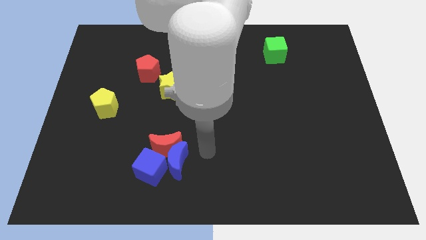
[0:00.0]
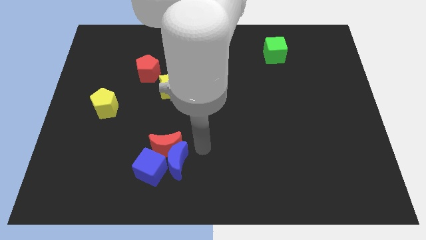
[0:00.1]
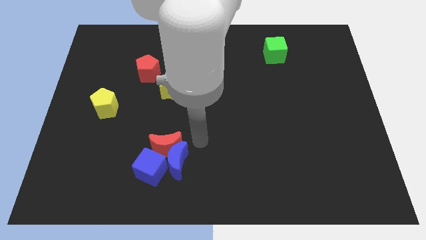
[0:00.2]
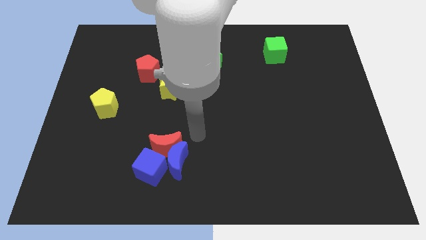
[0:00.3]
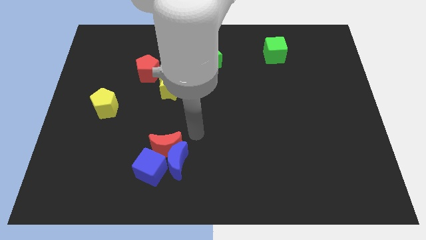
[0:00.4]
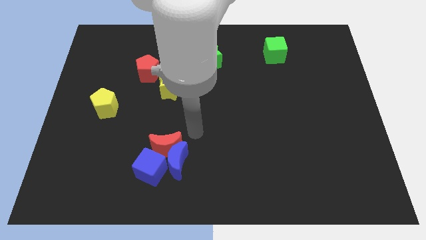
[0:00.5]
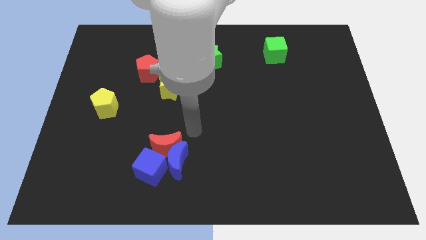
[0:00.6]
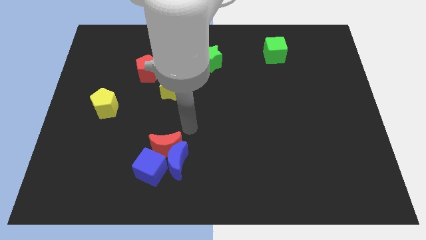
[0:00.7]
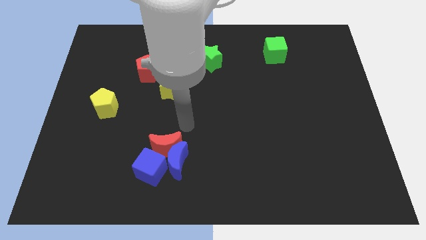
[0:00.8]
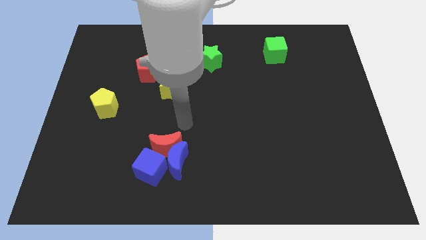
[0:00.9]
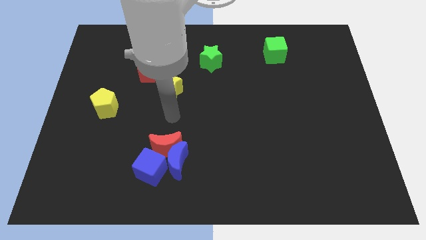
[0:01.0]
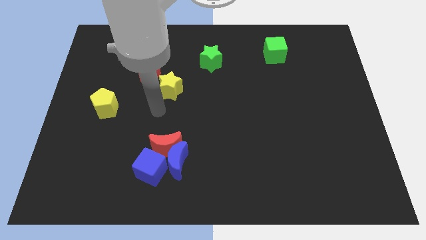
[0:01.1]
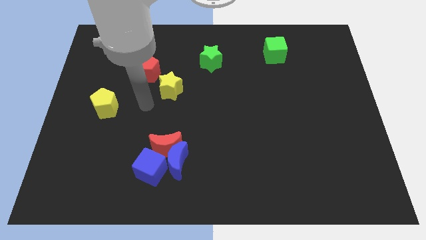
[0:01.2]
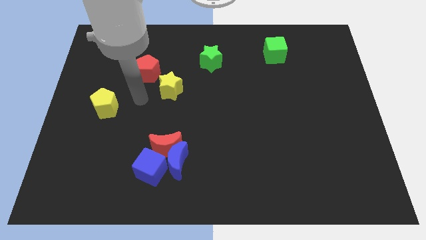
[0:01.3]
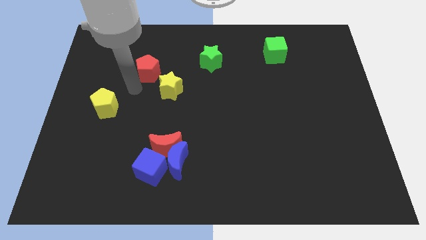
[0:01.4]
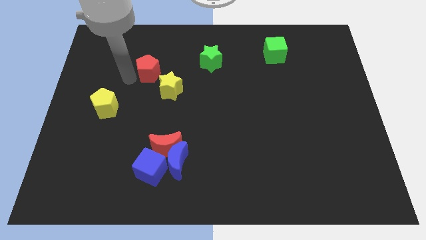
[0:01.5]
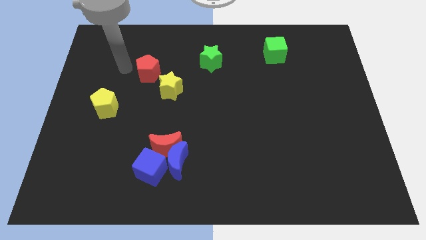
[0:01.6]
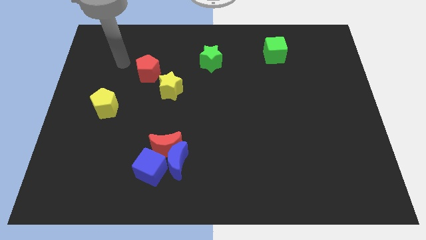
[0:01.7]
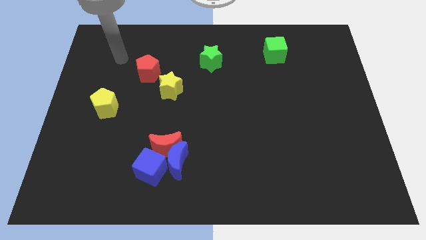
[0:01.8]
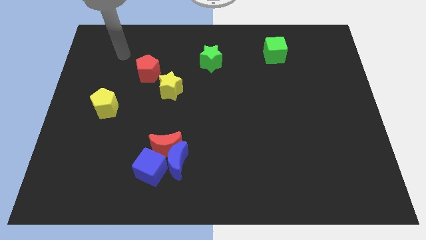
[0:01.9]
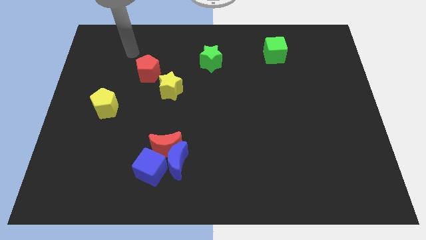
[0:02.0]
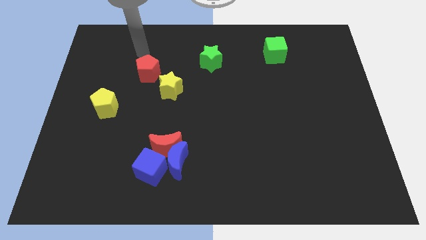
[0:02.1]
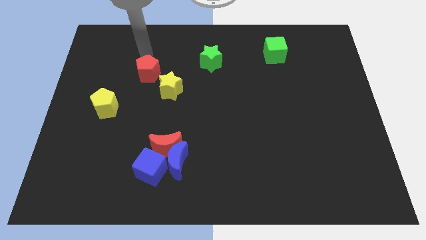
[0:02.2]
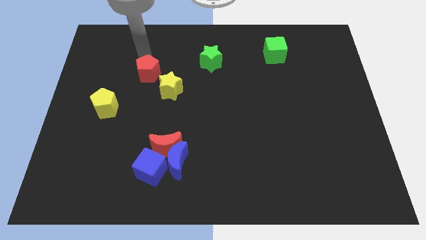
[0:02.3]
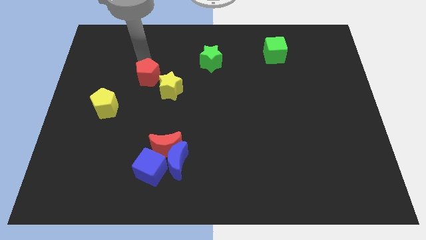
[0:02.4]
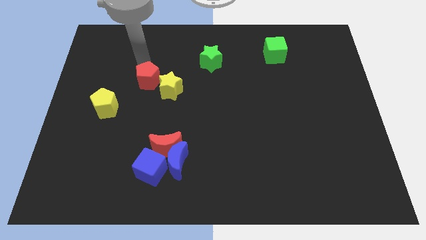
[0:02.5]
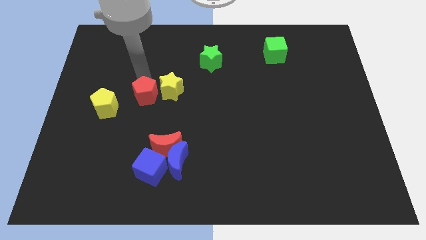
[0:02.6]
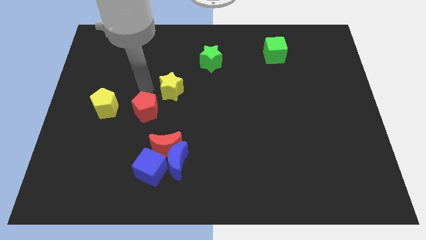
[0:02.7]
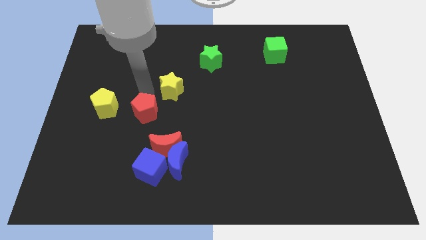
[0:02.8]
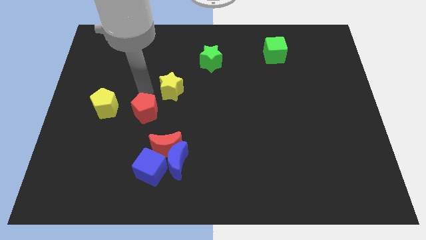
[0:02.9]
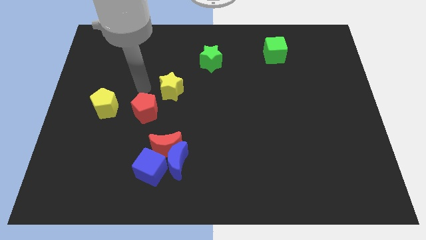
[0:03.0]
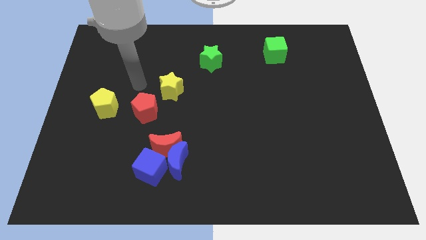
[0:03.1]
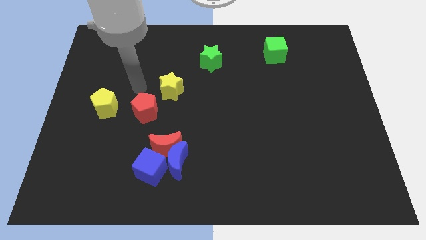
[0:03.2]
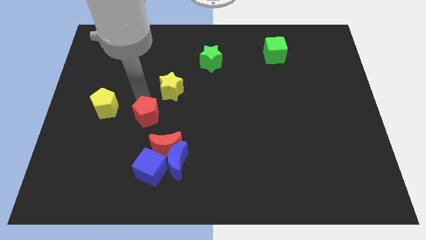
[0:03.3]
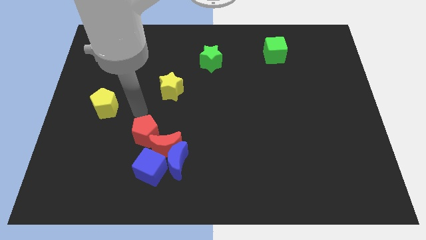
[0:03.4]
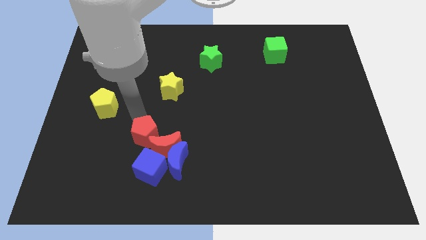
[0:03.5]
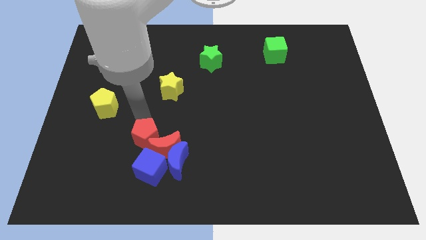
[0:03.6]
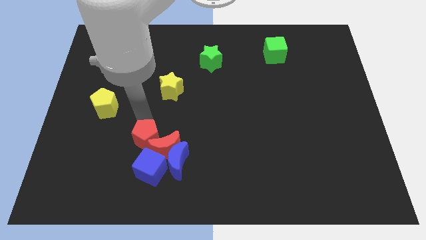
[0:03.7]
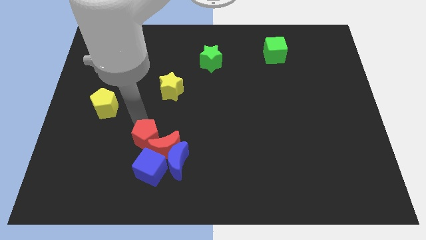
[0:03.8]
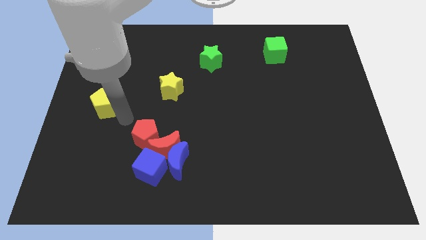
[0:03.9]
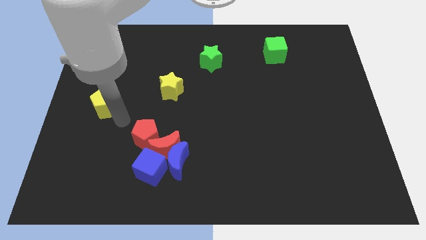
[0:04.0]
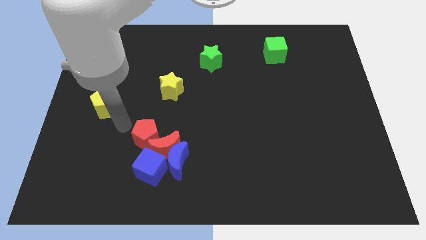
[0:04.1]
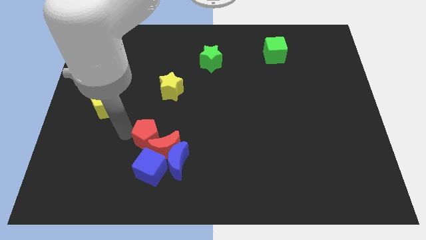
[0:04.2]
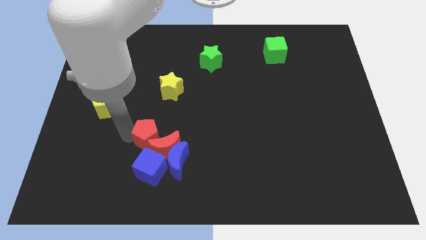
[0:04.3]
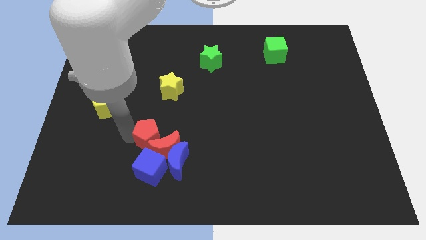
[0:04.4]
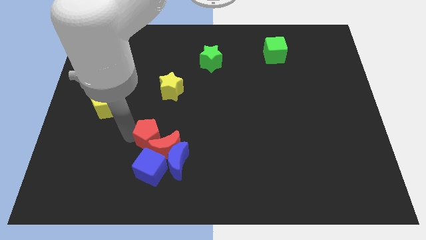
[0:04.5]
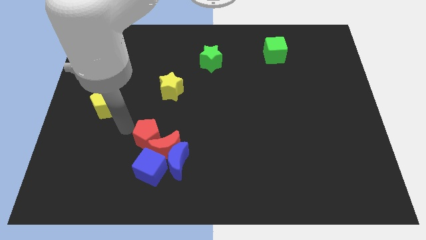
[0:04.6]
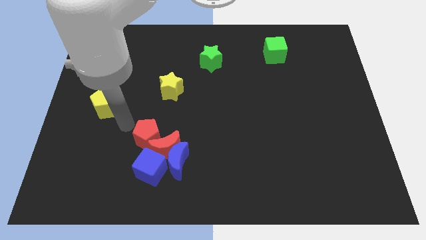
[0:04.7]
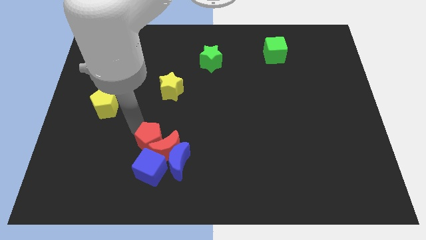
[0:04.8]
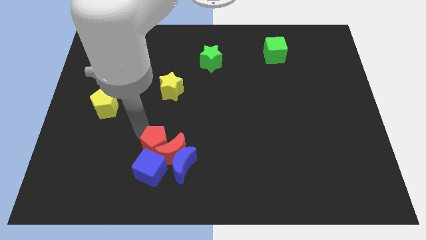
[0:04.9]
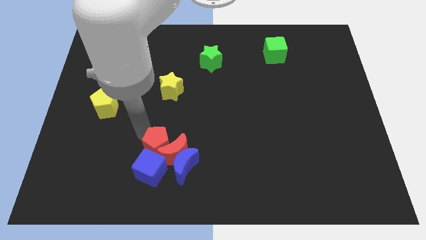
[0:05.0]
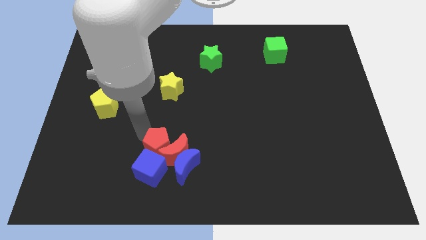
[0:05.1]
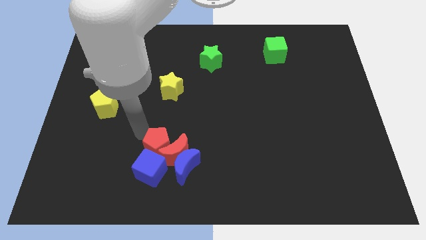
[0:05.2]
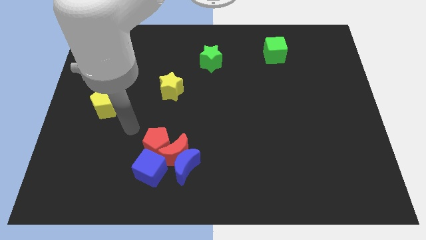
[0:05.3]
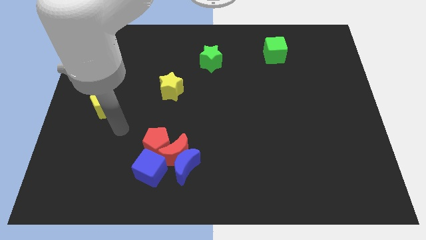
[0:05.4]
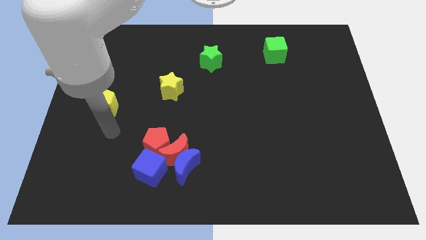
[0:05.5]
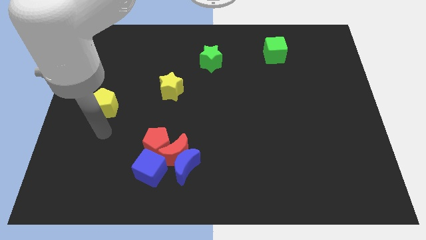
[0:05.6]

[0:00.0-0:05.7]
move the red pentagon into the red crescent

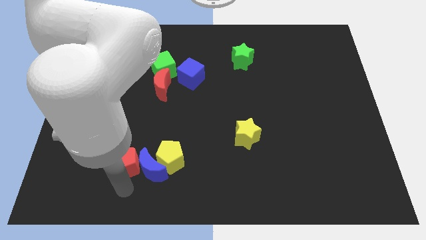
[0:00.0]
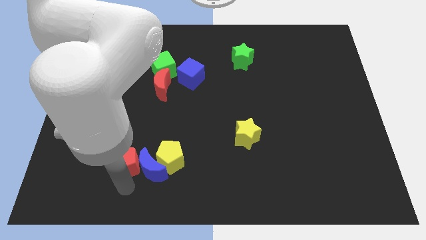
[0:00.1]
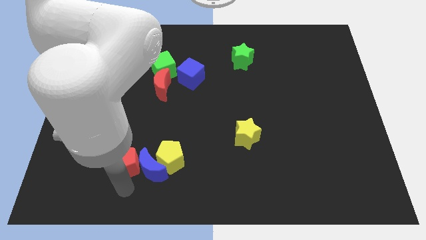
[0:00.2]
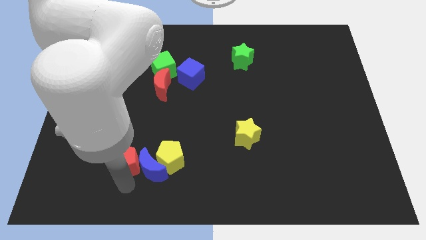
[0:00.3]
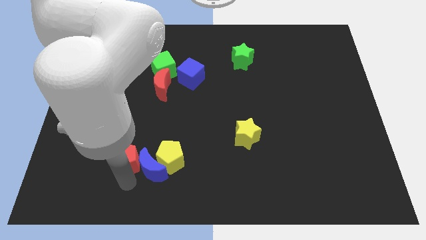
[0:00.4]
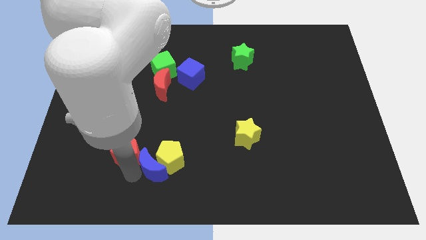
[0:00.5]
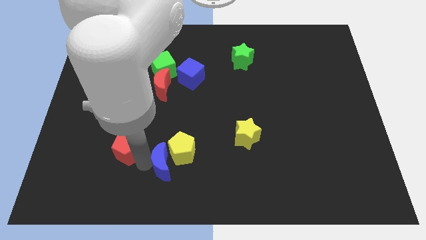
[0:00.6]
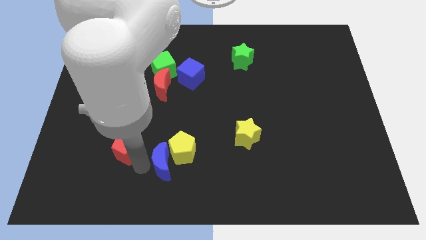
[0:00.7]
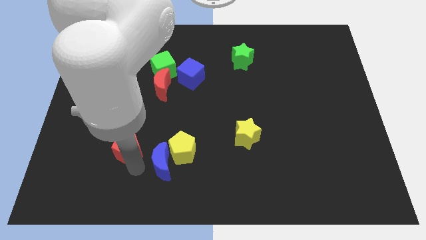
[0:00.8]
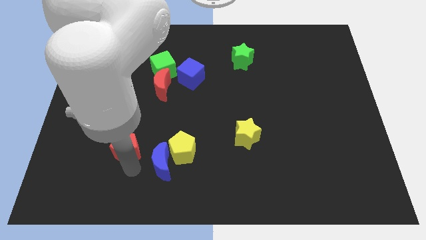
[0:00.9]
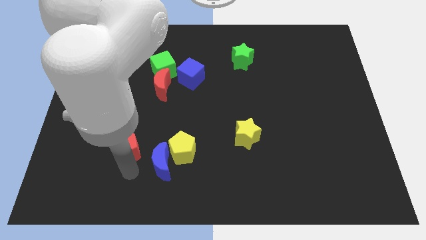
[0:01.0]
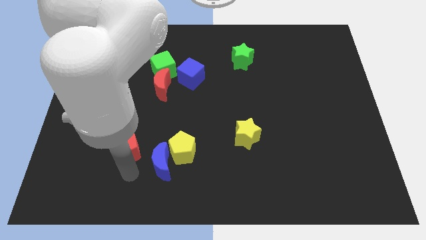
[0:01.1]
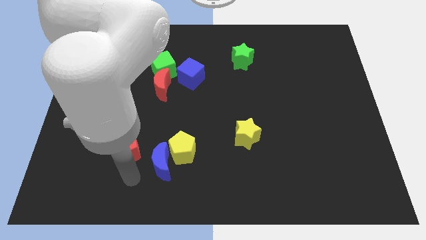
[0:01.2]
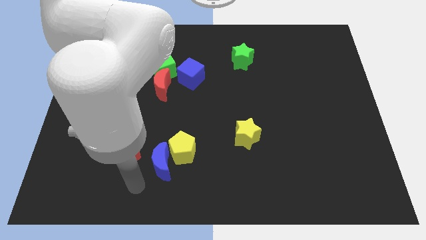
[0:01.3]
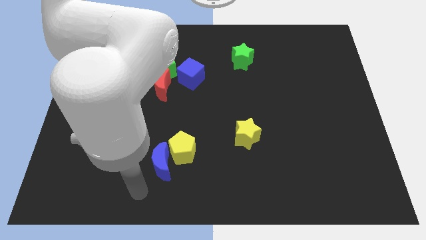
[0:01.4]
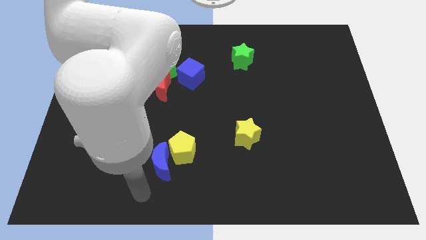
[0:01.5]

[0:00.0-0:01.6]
separate red pentagon and blue moon

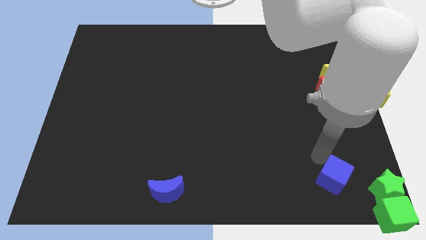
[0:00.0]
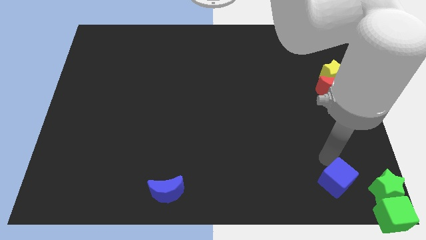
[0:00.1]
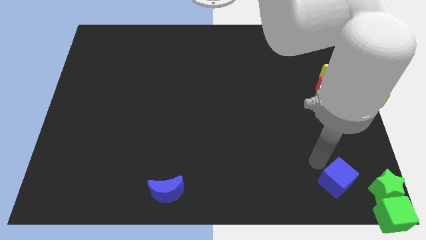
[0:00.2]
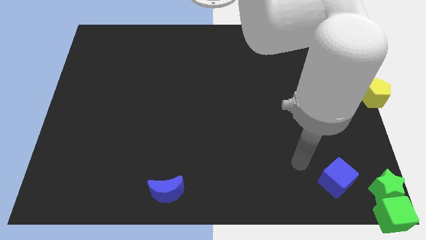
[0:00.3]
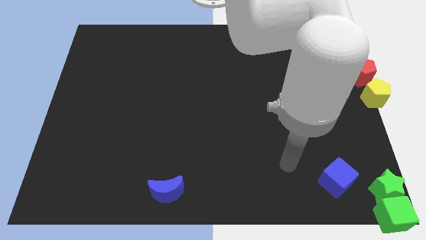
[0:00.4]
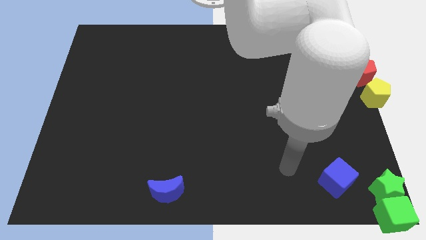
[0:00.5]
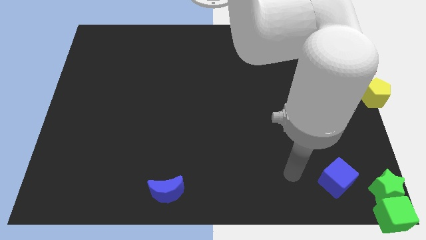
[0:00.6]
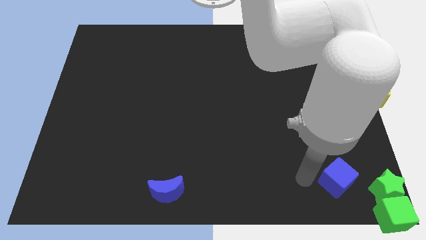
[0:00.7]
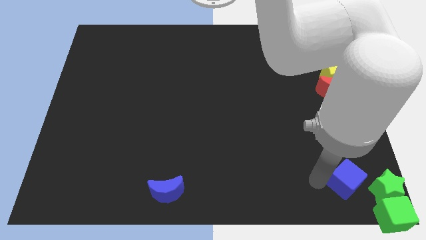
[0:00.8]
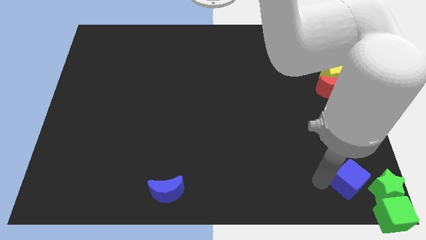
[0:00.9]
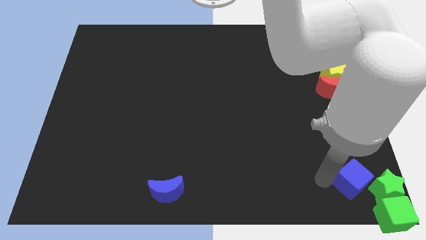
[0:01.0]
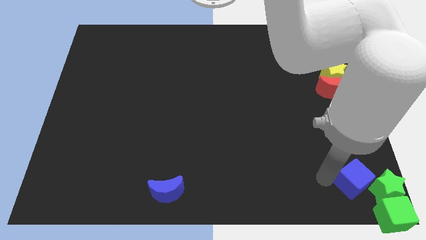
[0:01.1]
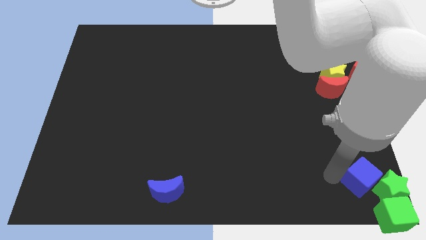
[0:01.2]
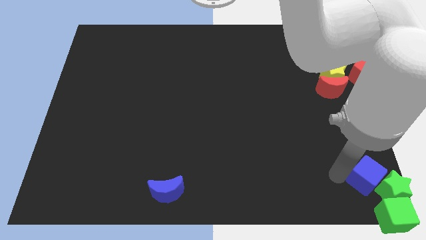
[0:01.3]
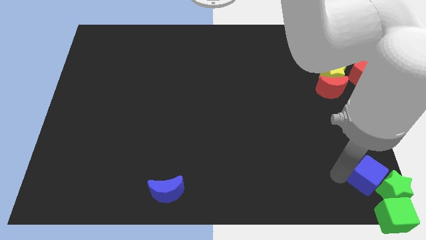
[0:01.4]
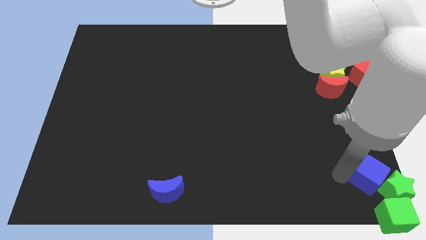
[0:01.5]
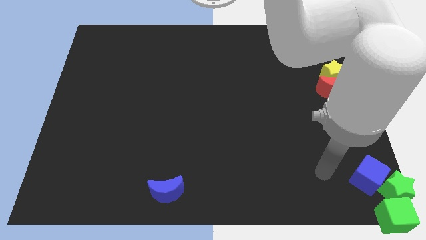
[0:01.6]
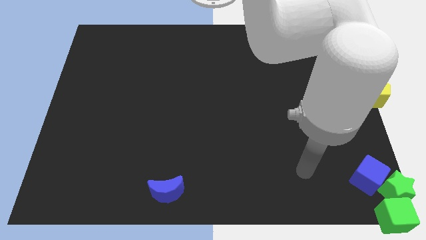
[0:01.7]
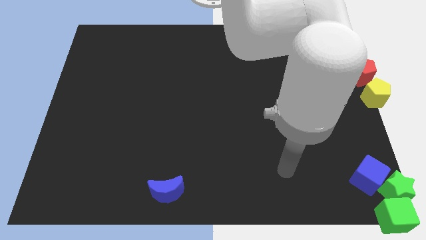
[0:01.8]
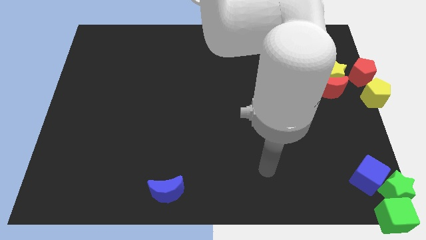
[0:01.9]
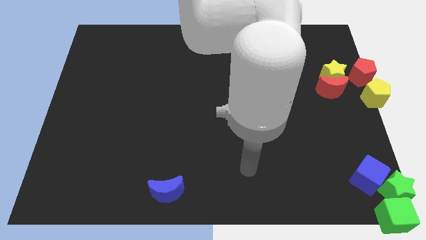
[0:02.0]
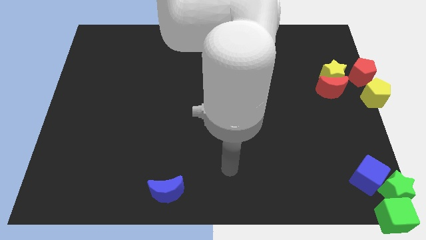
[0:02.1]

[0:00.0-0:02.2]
move the blue cube into the green star
